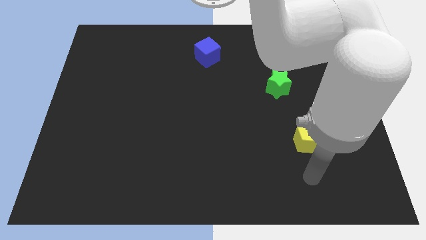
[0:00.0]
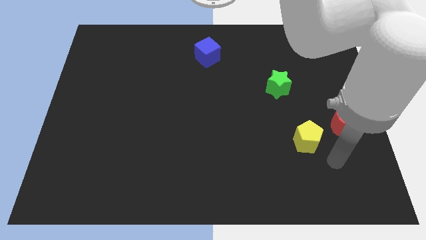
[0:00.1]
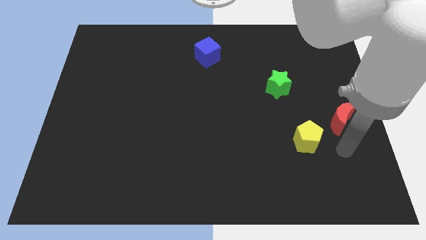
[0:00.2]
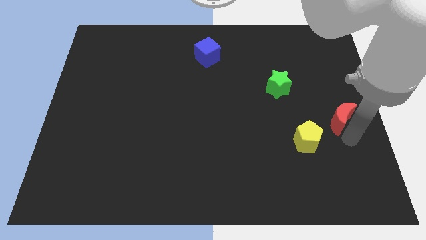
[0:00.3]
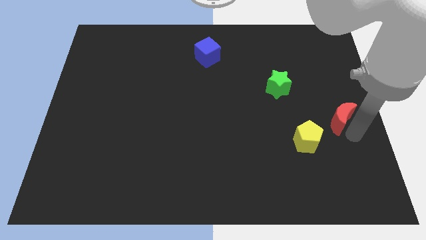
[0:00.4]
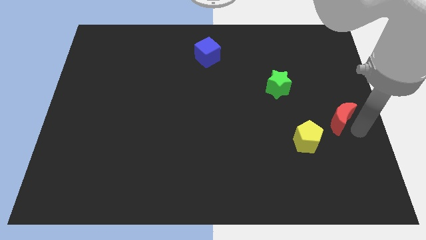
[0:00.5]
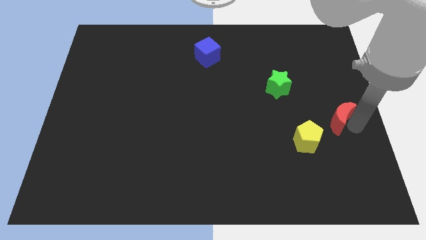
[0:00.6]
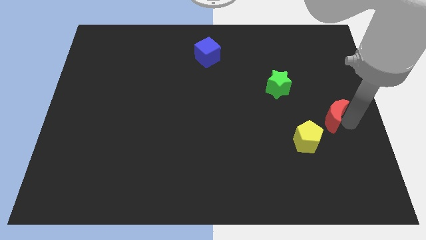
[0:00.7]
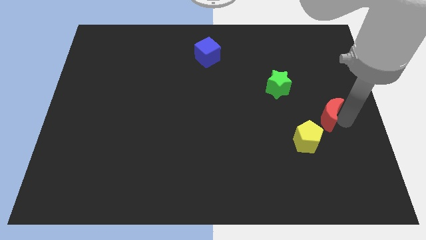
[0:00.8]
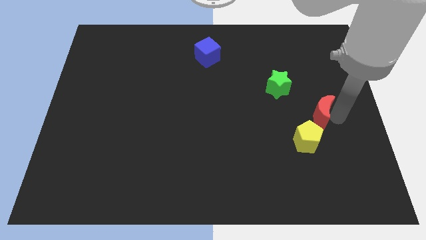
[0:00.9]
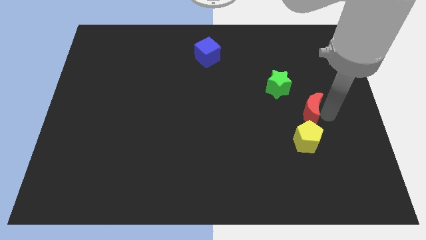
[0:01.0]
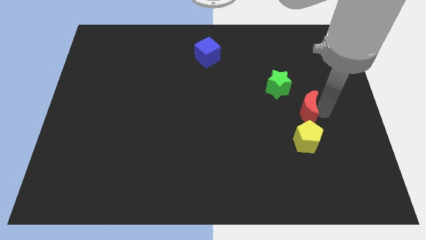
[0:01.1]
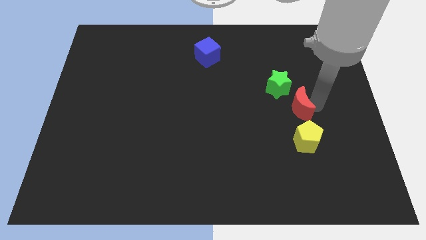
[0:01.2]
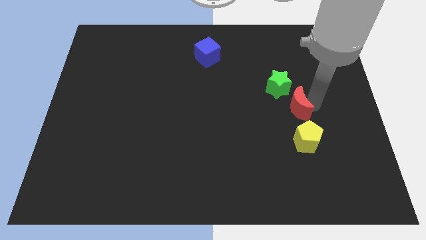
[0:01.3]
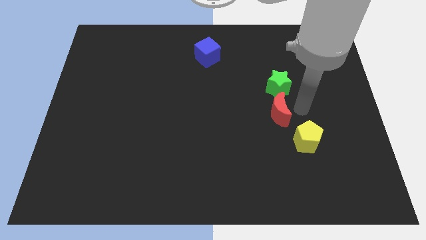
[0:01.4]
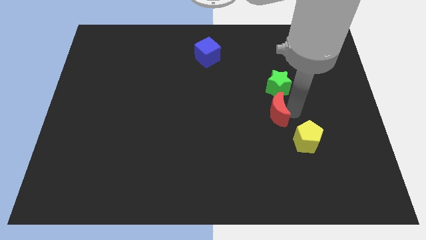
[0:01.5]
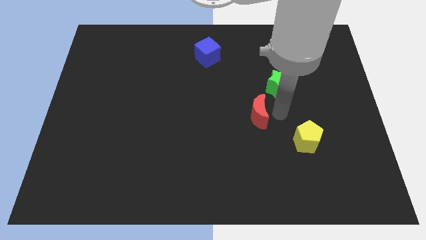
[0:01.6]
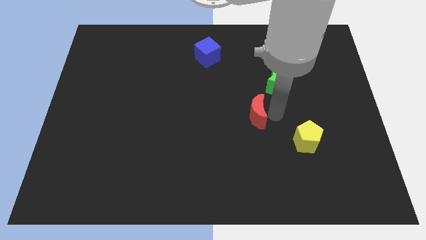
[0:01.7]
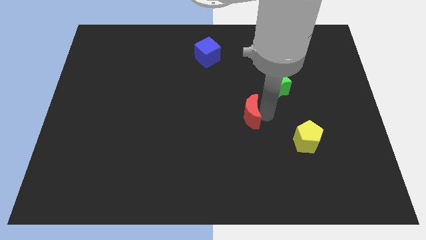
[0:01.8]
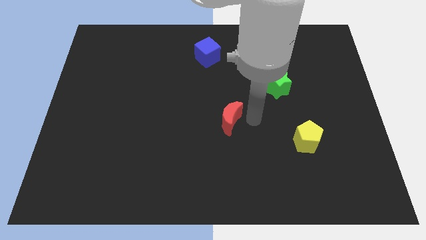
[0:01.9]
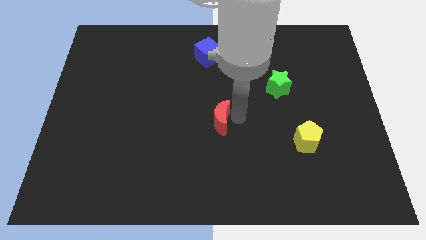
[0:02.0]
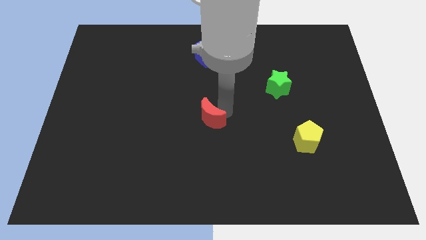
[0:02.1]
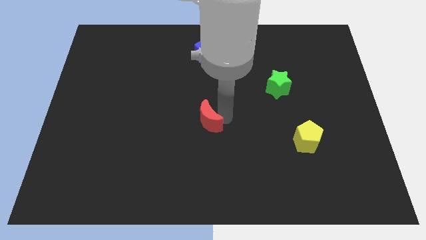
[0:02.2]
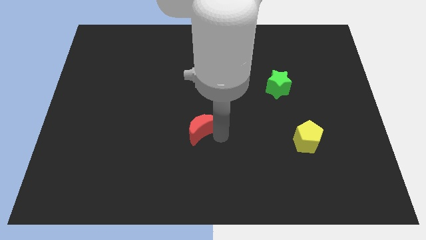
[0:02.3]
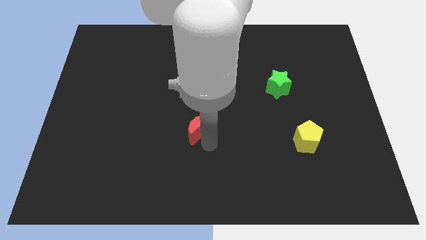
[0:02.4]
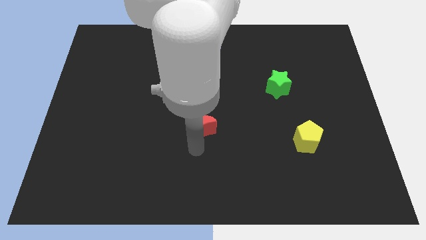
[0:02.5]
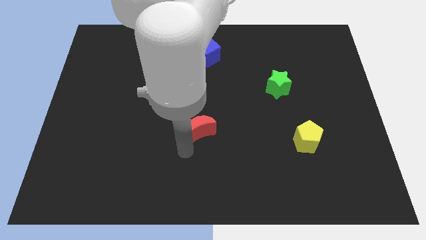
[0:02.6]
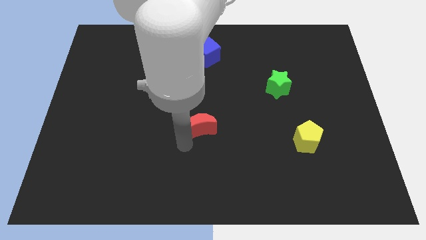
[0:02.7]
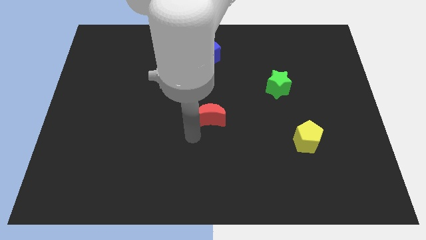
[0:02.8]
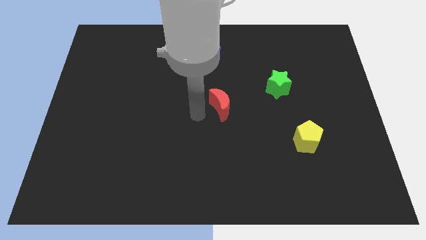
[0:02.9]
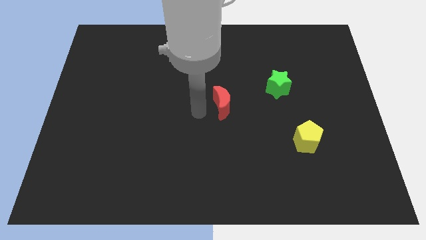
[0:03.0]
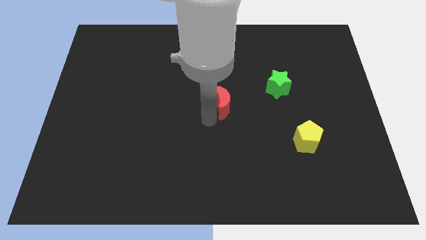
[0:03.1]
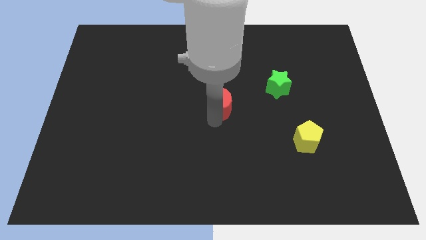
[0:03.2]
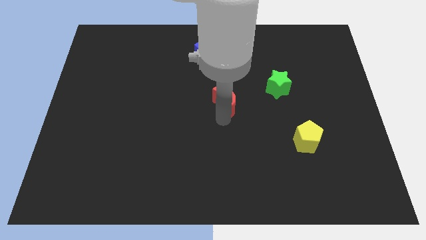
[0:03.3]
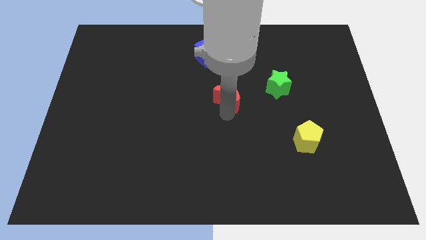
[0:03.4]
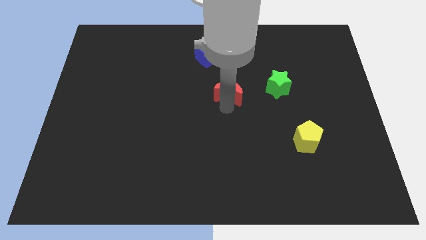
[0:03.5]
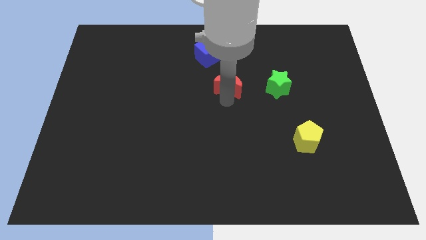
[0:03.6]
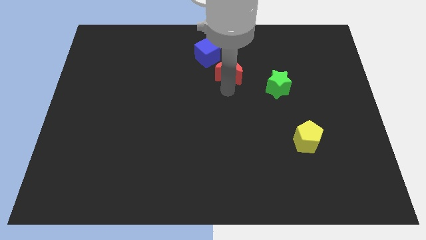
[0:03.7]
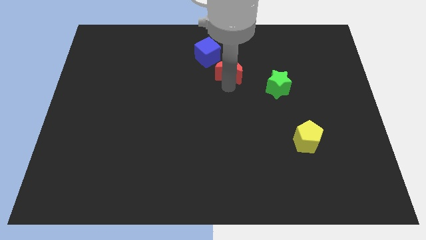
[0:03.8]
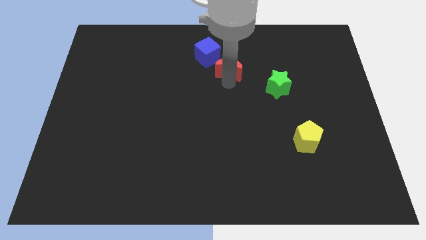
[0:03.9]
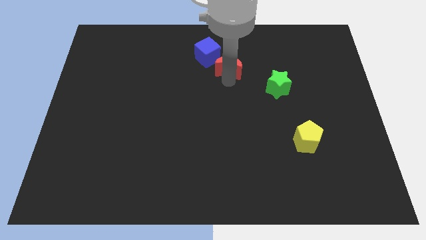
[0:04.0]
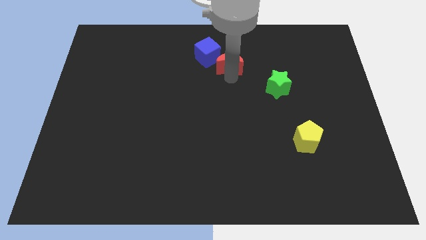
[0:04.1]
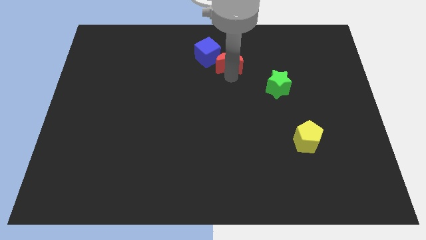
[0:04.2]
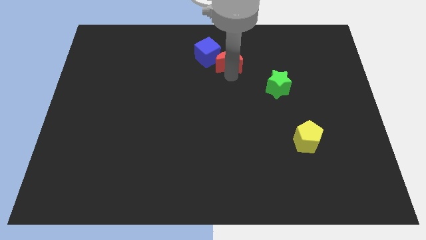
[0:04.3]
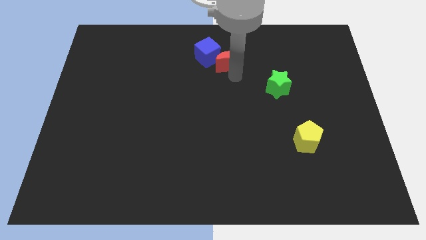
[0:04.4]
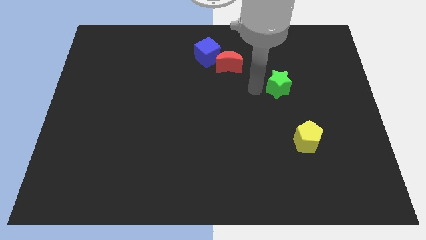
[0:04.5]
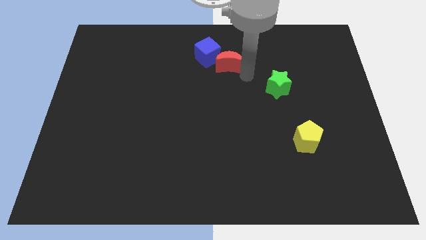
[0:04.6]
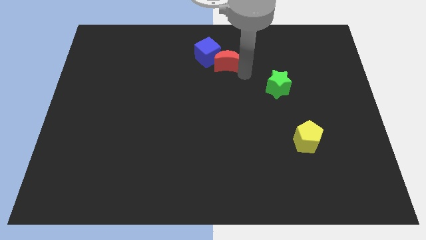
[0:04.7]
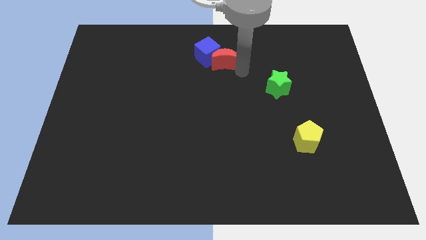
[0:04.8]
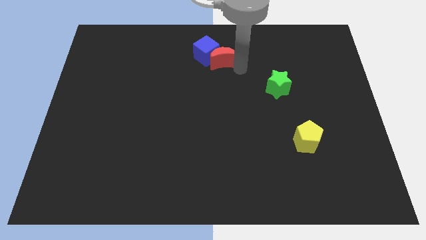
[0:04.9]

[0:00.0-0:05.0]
put the red block next to the cube

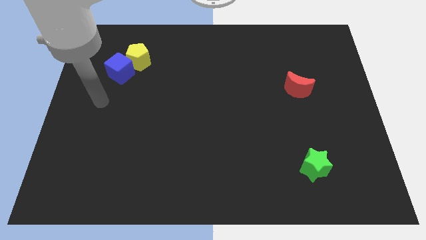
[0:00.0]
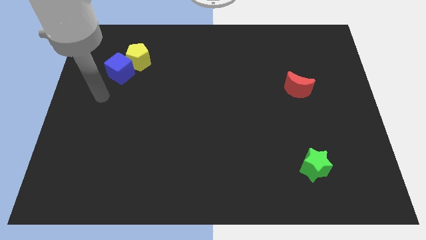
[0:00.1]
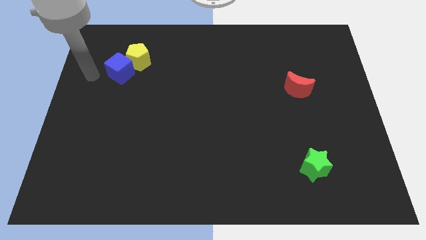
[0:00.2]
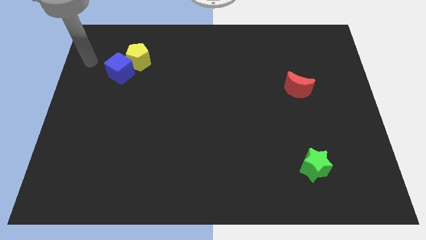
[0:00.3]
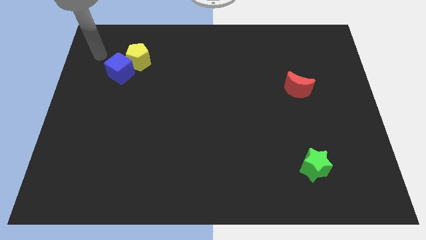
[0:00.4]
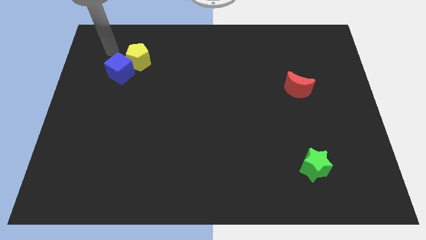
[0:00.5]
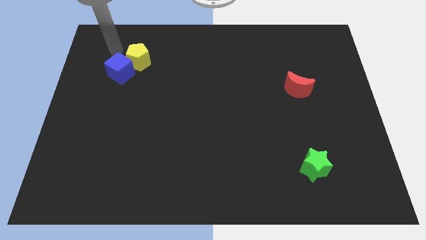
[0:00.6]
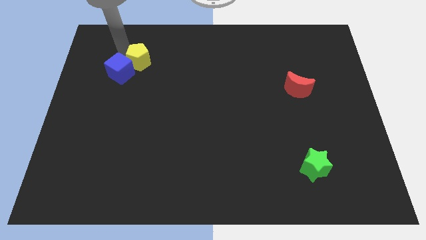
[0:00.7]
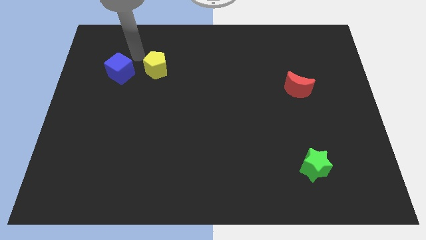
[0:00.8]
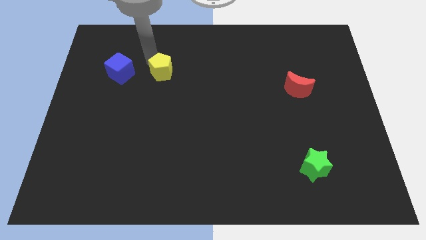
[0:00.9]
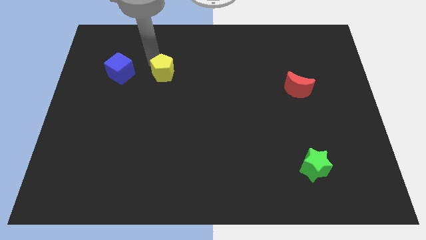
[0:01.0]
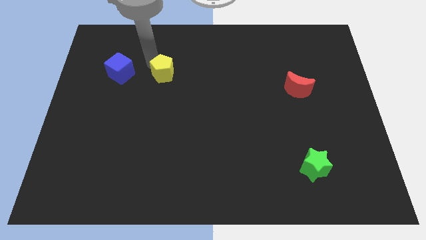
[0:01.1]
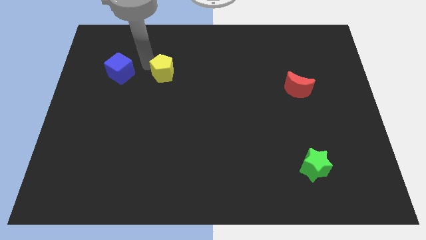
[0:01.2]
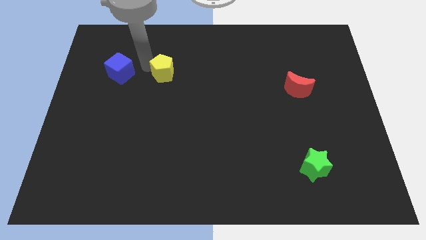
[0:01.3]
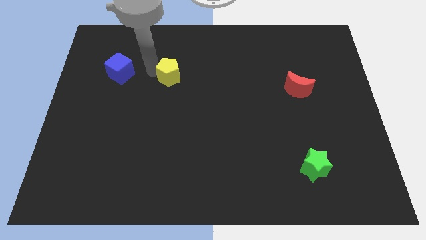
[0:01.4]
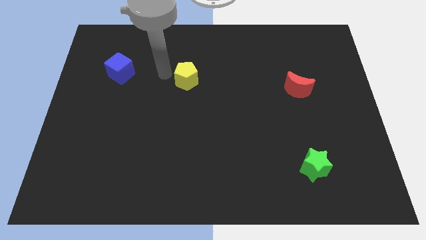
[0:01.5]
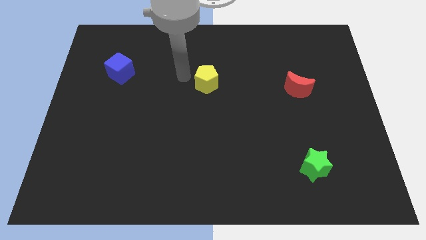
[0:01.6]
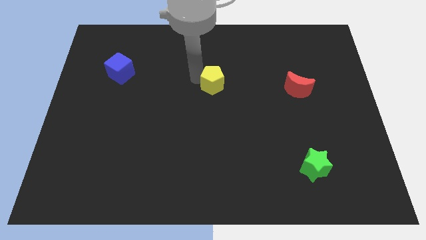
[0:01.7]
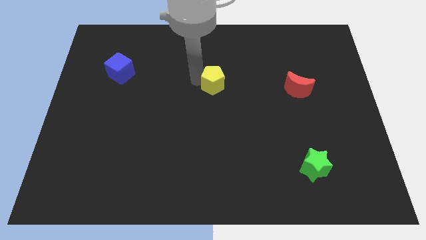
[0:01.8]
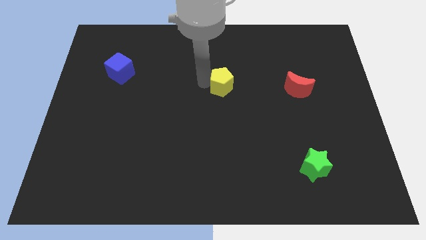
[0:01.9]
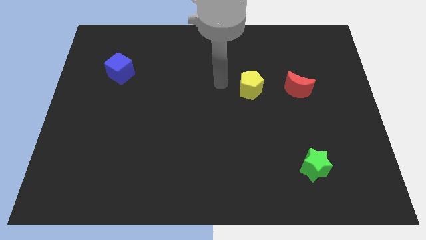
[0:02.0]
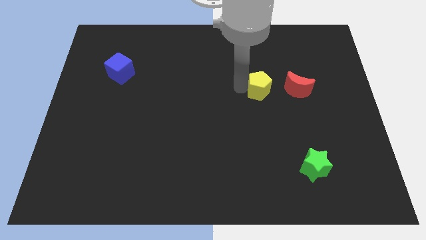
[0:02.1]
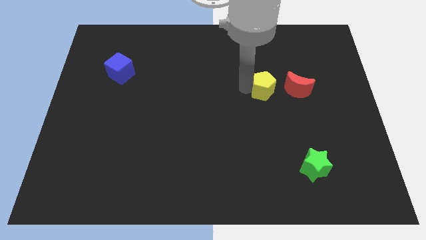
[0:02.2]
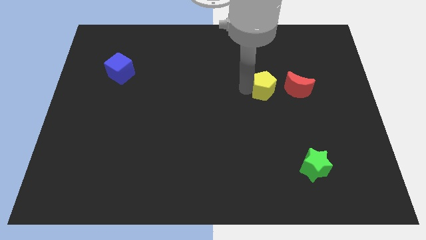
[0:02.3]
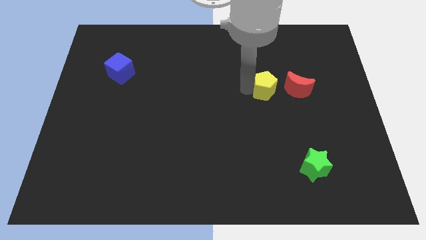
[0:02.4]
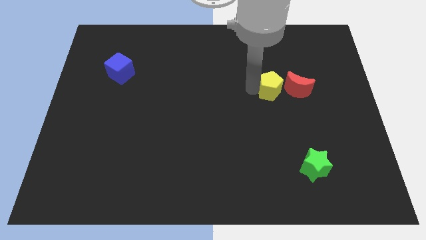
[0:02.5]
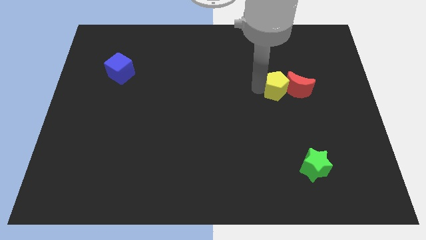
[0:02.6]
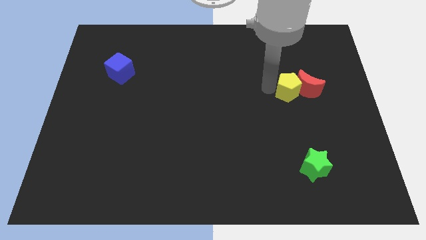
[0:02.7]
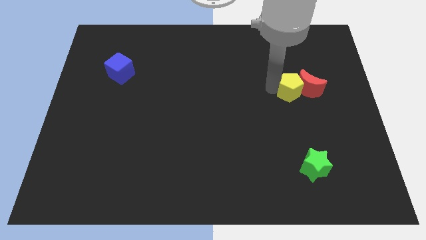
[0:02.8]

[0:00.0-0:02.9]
move the pentagon close to the red block

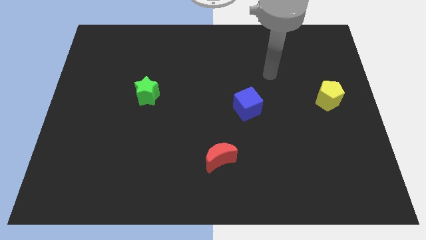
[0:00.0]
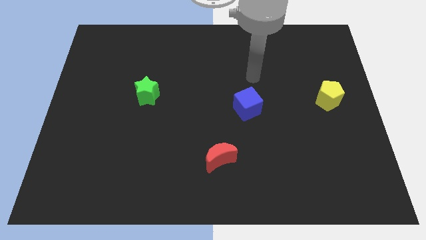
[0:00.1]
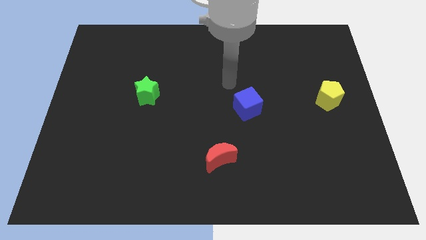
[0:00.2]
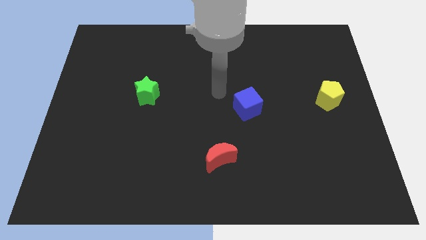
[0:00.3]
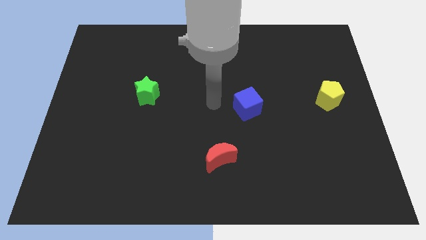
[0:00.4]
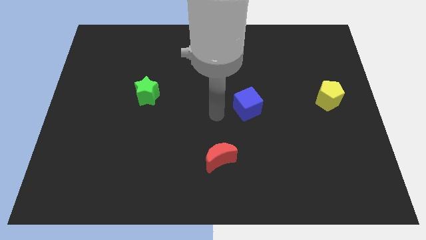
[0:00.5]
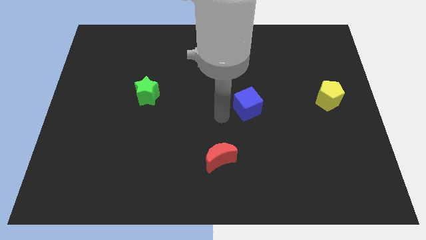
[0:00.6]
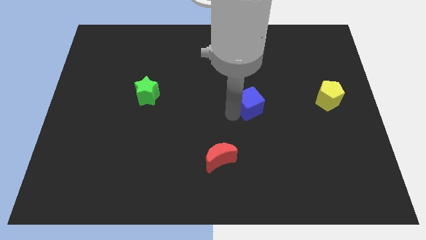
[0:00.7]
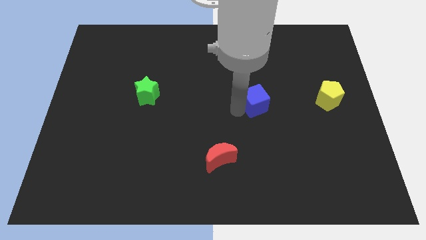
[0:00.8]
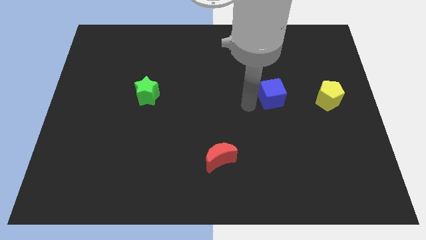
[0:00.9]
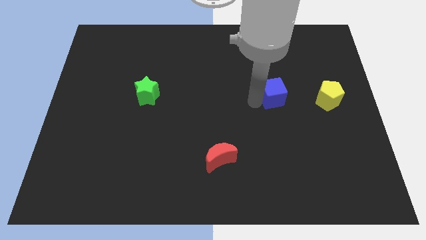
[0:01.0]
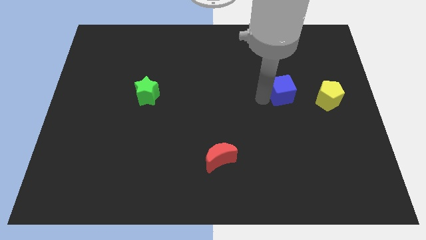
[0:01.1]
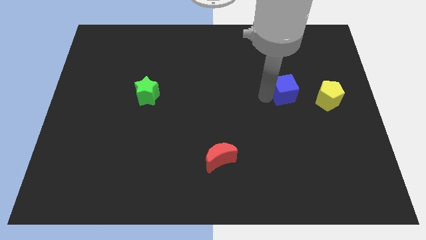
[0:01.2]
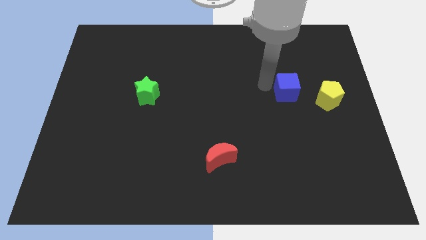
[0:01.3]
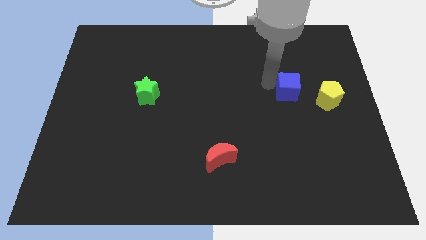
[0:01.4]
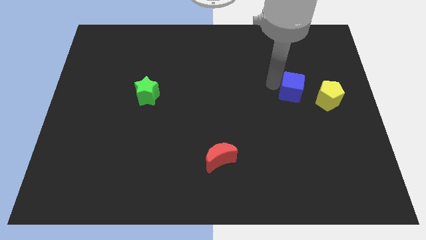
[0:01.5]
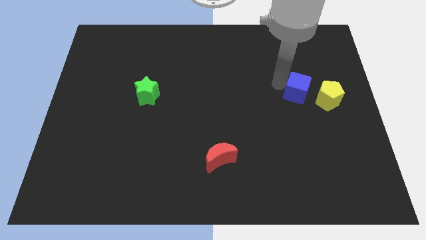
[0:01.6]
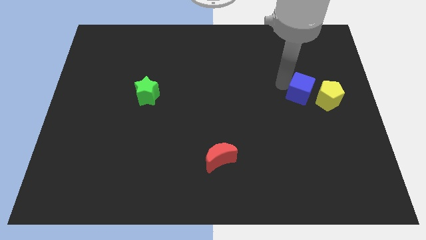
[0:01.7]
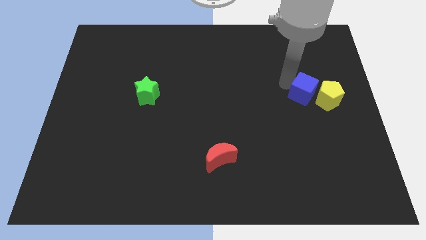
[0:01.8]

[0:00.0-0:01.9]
move the blue block to the yellow block
